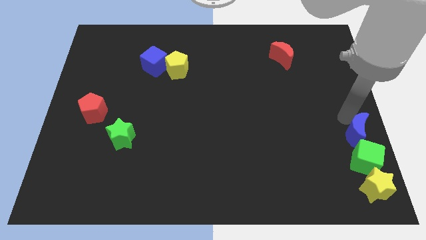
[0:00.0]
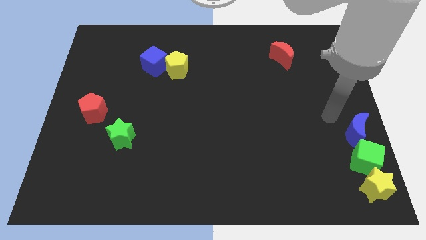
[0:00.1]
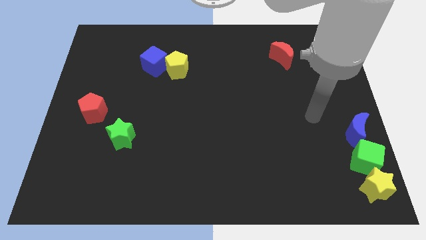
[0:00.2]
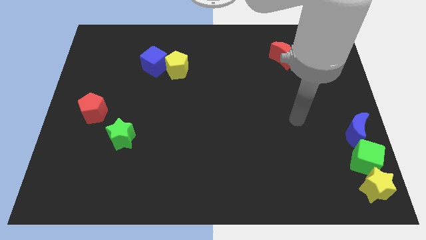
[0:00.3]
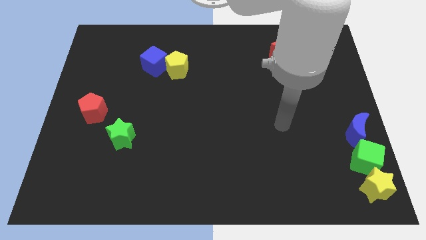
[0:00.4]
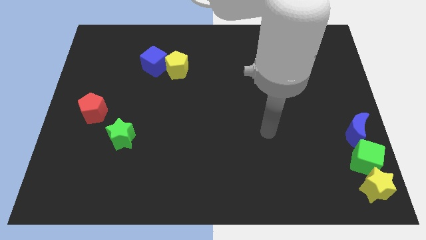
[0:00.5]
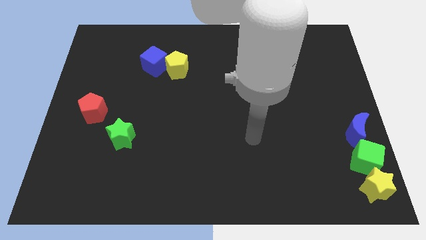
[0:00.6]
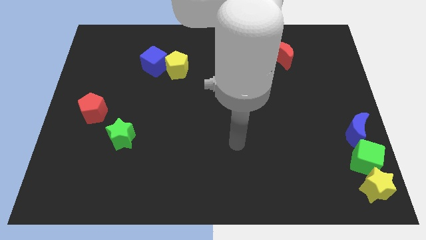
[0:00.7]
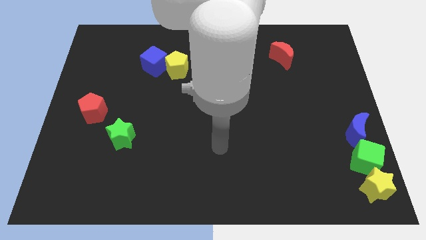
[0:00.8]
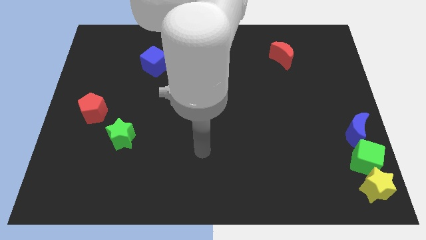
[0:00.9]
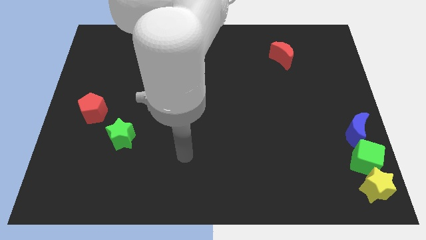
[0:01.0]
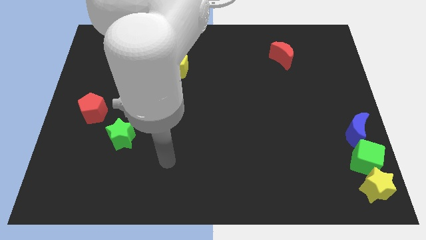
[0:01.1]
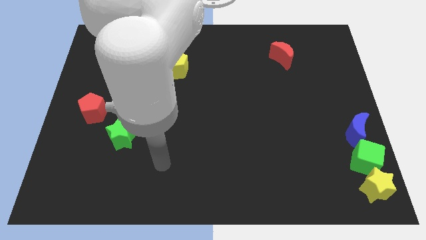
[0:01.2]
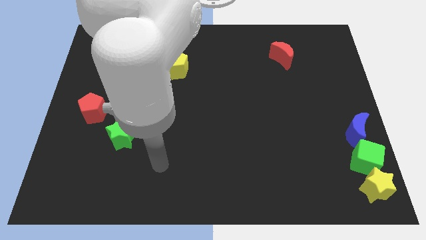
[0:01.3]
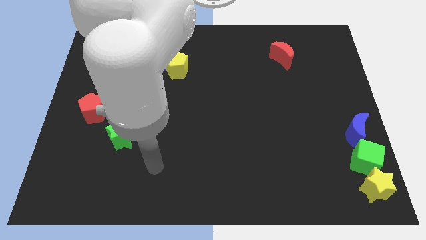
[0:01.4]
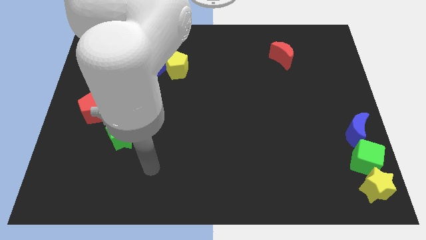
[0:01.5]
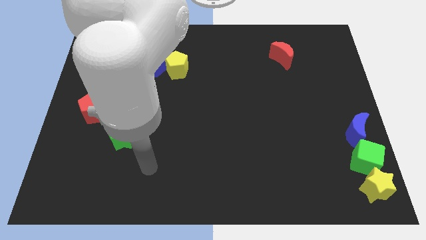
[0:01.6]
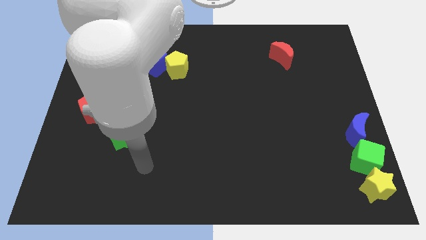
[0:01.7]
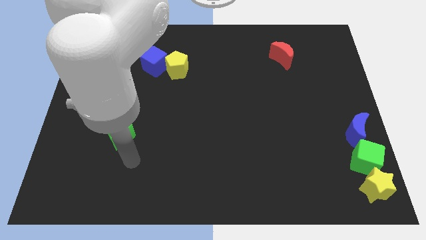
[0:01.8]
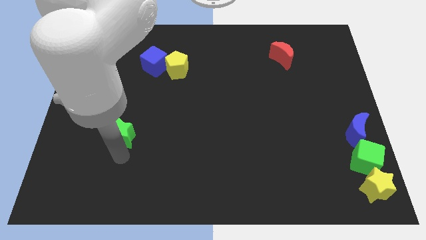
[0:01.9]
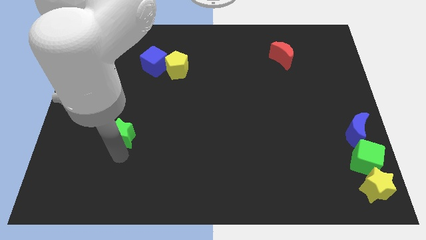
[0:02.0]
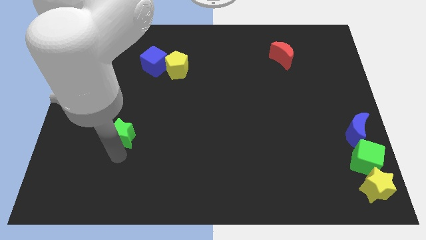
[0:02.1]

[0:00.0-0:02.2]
move your arm away from blue moon

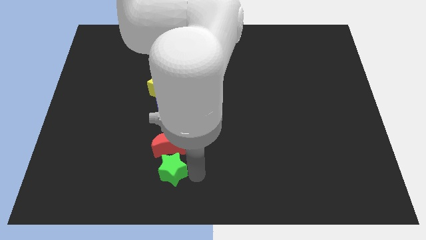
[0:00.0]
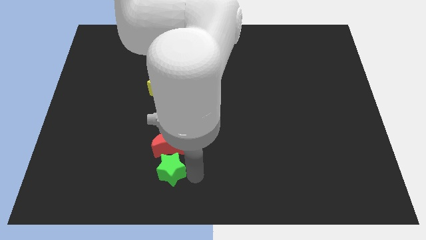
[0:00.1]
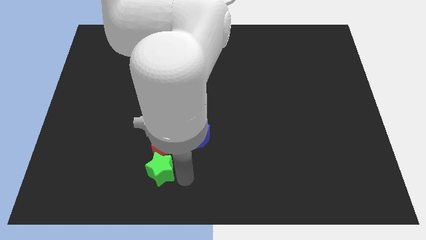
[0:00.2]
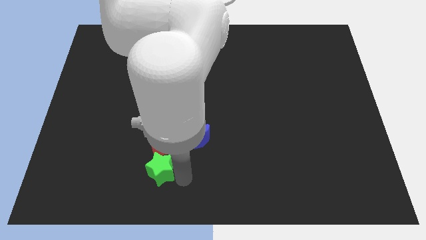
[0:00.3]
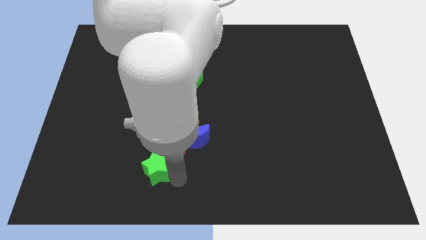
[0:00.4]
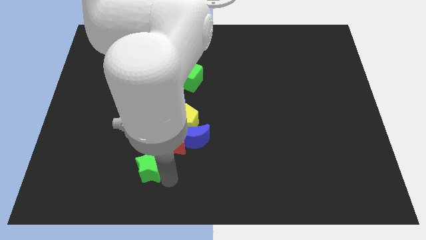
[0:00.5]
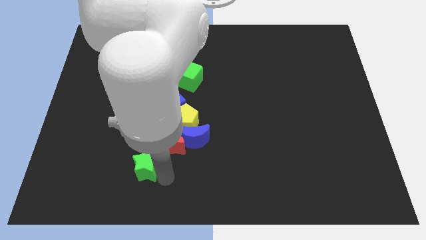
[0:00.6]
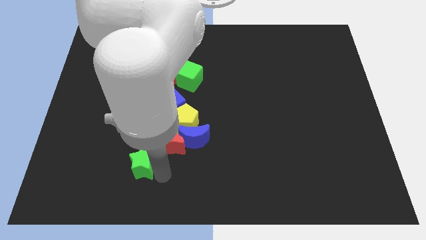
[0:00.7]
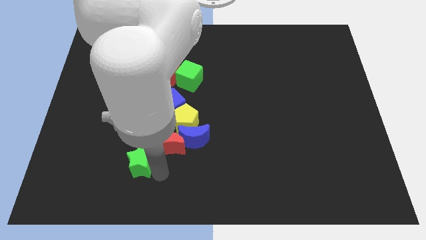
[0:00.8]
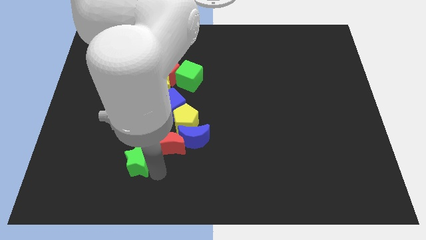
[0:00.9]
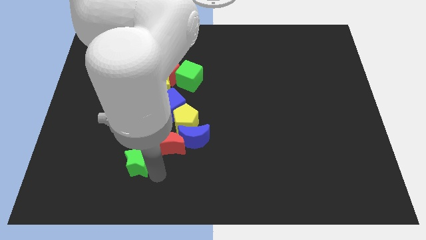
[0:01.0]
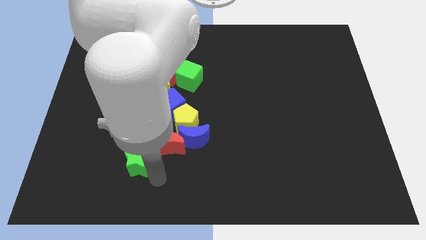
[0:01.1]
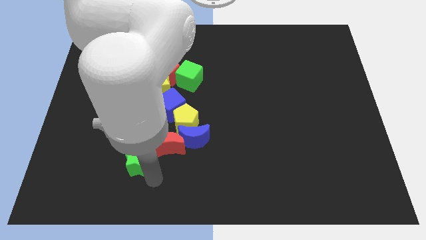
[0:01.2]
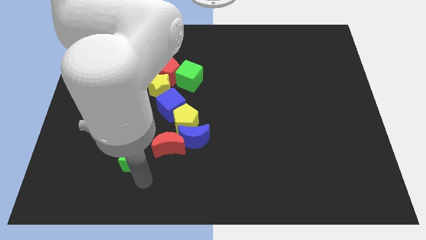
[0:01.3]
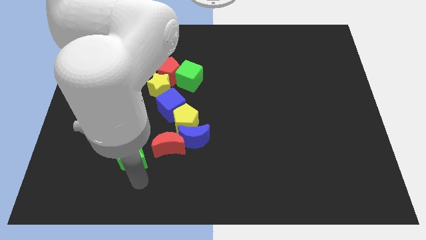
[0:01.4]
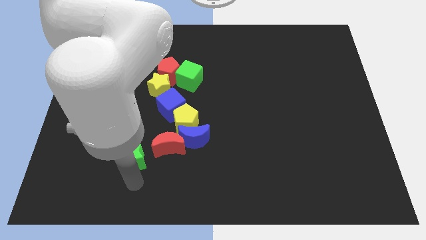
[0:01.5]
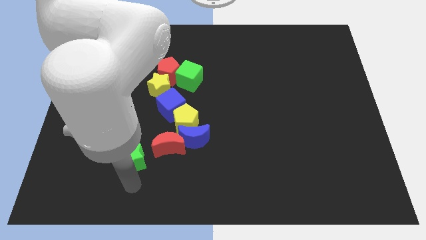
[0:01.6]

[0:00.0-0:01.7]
push the green star at the left side of the red moon

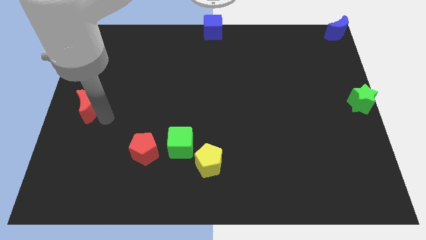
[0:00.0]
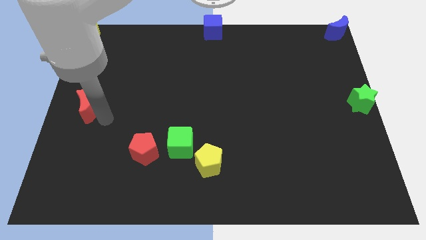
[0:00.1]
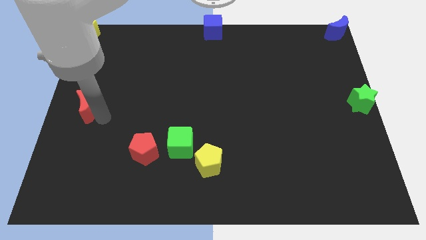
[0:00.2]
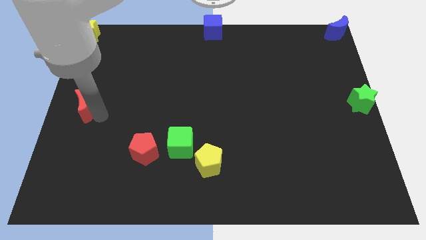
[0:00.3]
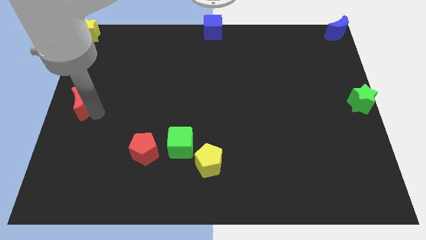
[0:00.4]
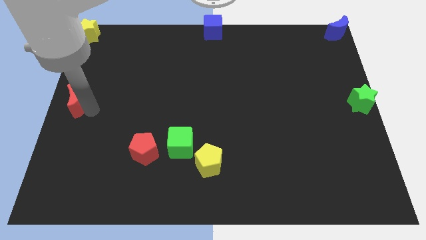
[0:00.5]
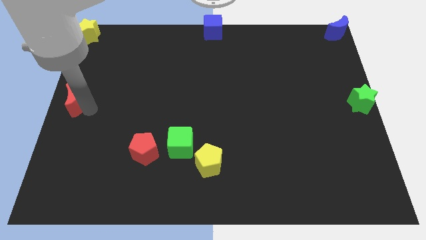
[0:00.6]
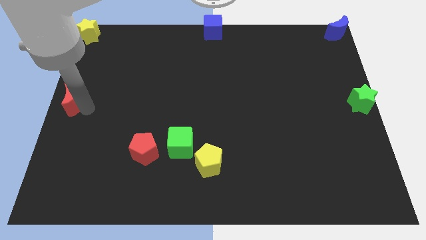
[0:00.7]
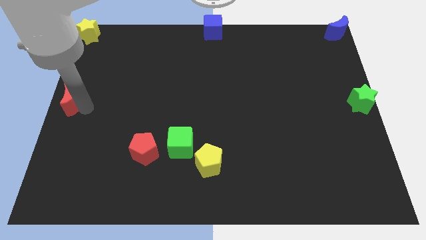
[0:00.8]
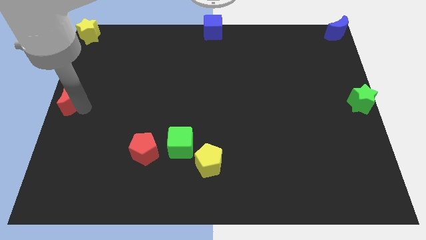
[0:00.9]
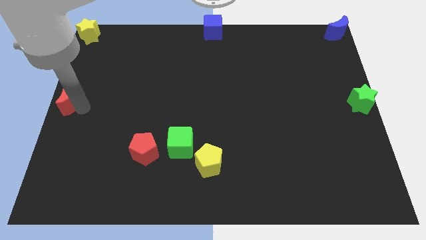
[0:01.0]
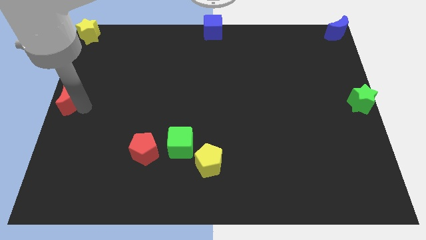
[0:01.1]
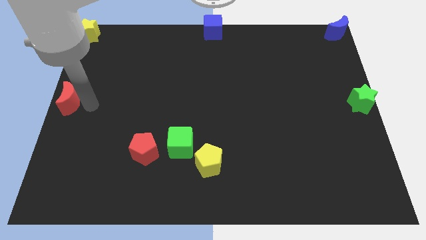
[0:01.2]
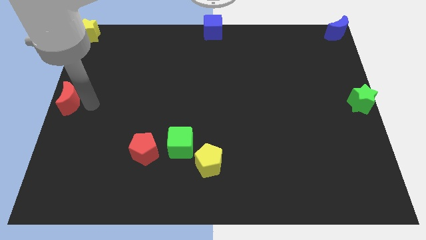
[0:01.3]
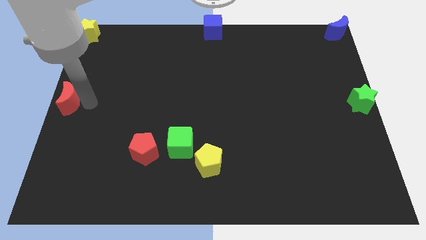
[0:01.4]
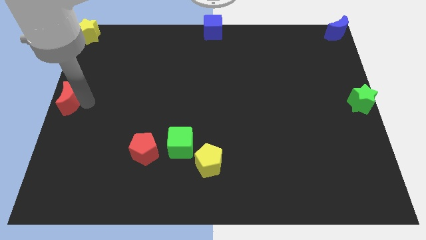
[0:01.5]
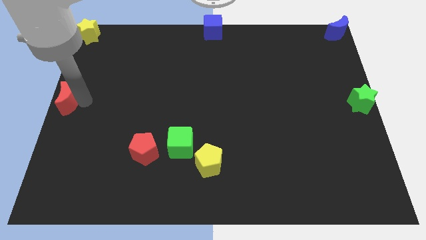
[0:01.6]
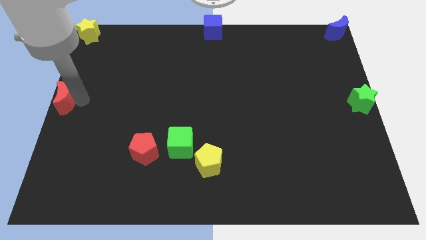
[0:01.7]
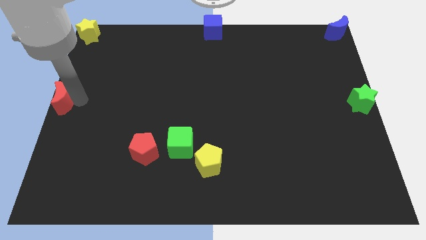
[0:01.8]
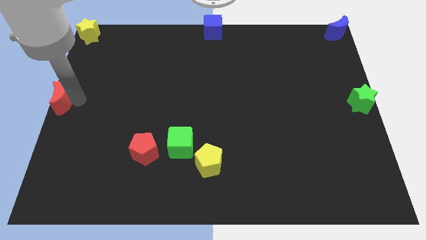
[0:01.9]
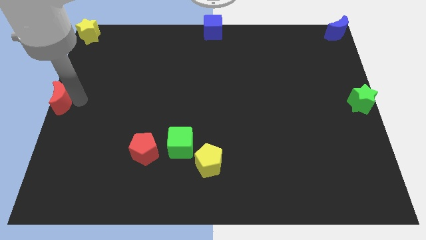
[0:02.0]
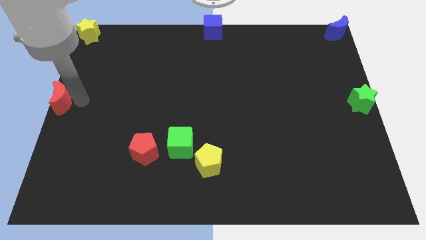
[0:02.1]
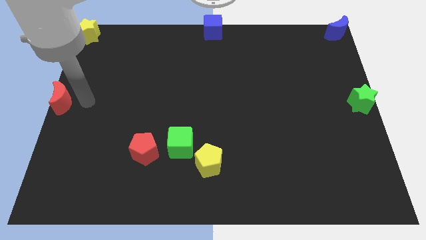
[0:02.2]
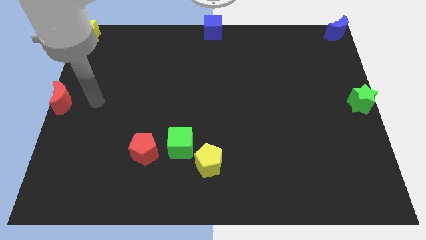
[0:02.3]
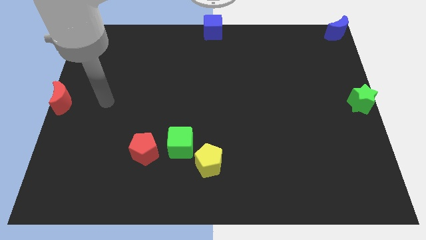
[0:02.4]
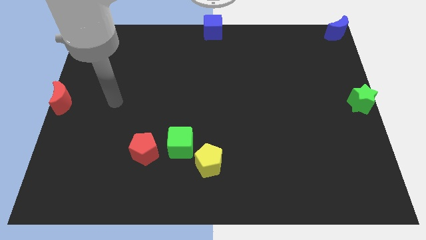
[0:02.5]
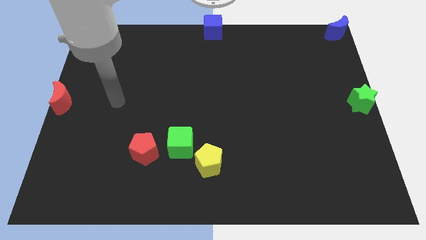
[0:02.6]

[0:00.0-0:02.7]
place the red crescent at the left center of the board

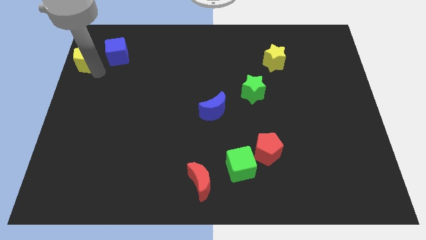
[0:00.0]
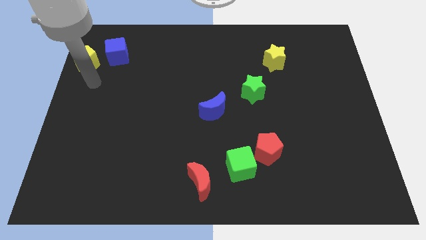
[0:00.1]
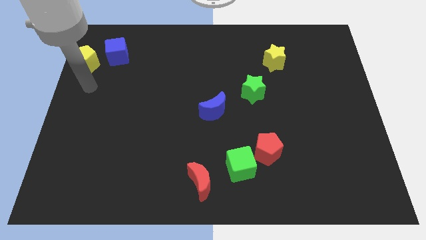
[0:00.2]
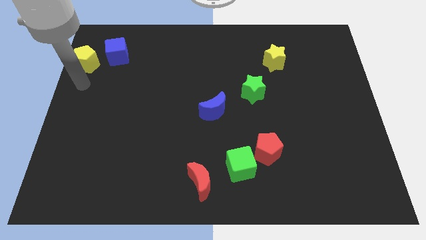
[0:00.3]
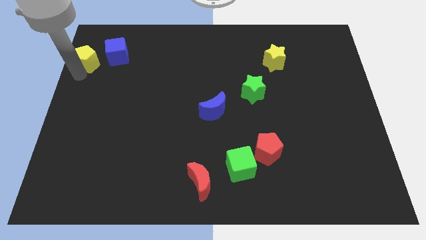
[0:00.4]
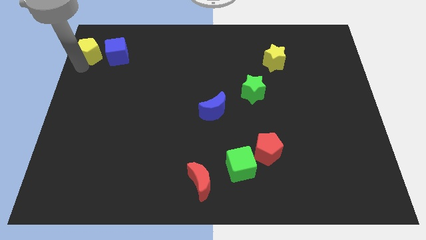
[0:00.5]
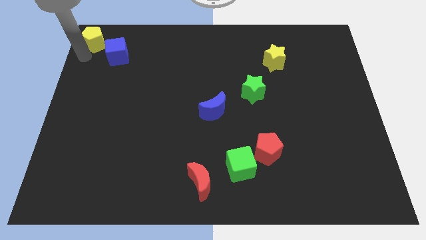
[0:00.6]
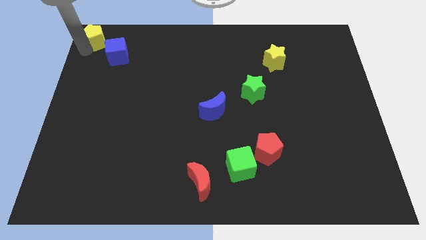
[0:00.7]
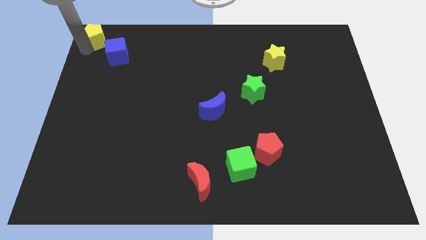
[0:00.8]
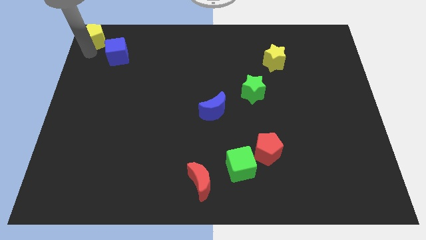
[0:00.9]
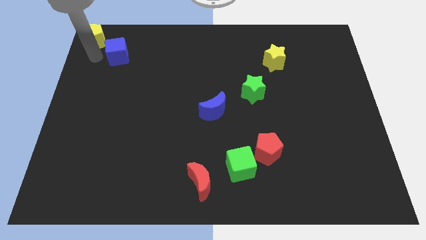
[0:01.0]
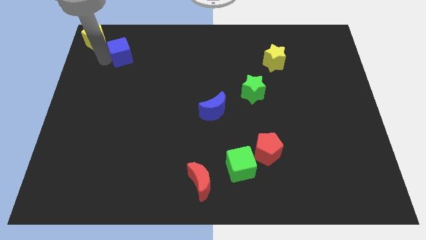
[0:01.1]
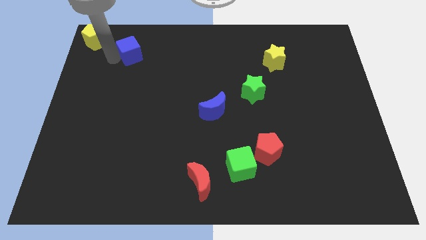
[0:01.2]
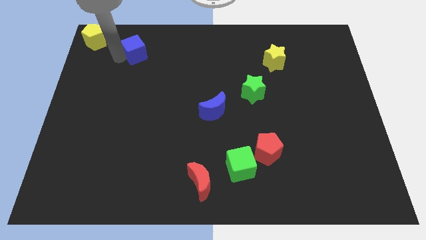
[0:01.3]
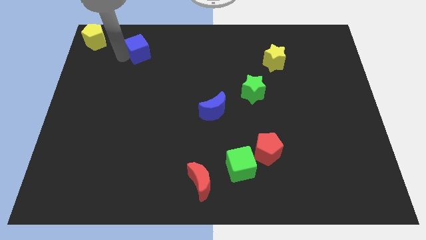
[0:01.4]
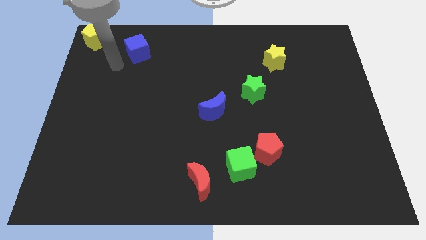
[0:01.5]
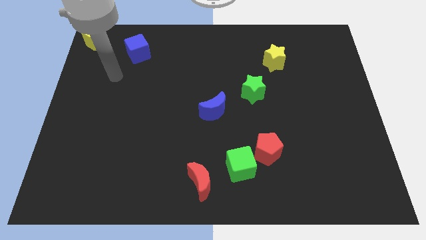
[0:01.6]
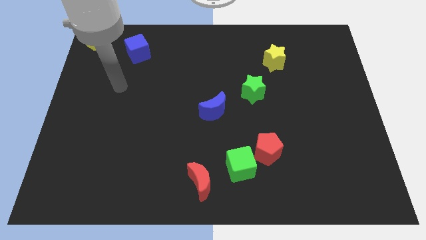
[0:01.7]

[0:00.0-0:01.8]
place the yellow pentagon to the top left side of the corner diagonal to the blue cube

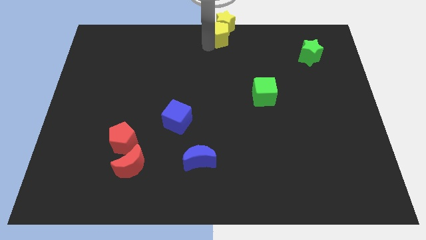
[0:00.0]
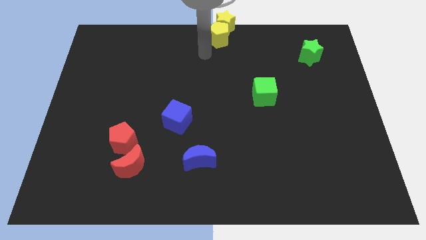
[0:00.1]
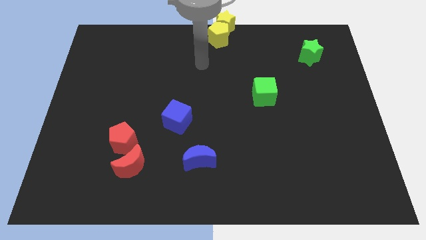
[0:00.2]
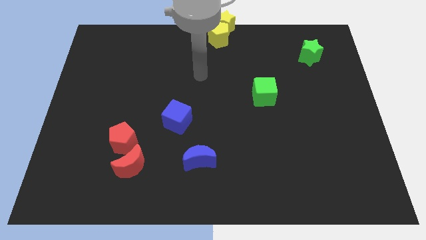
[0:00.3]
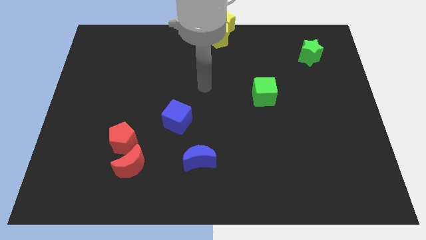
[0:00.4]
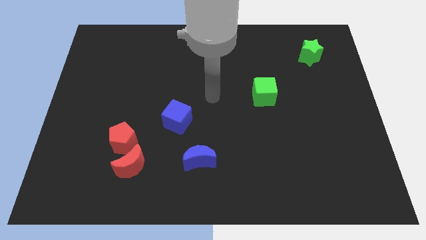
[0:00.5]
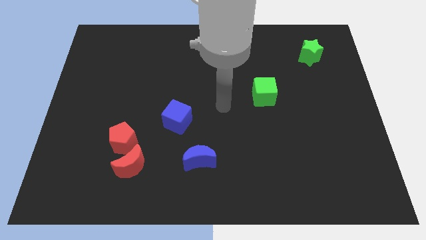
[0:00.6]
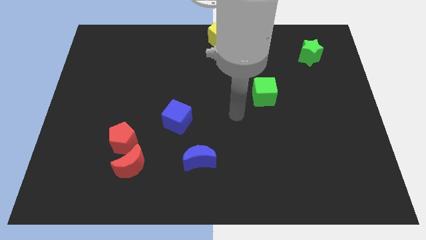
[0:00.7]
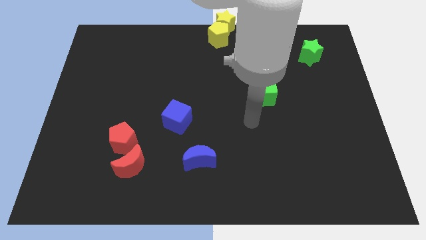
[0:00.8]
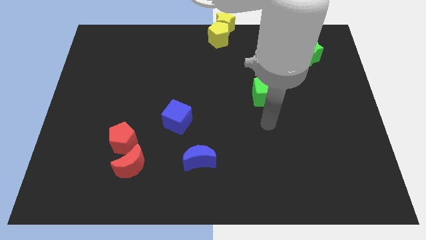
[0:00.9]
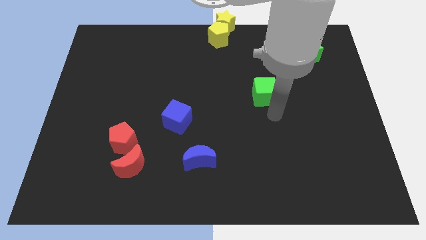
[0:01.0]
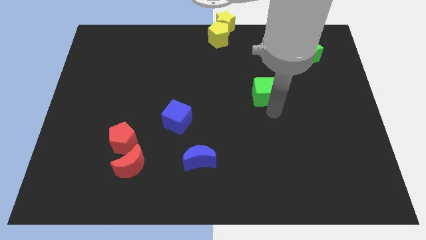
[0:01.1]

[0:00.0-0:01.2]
place your hand below the green cube
